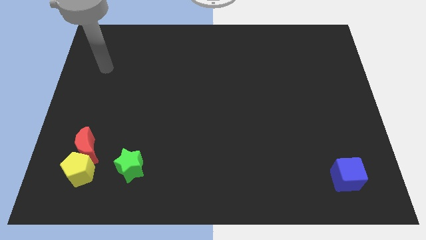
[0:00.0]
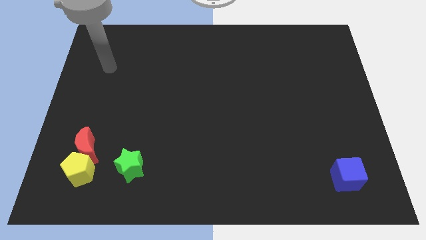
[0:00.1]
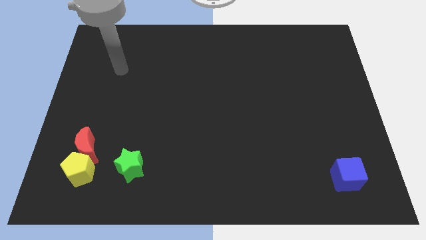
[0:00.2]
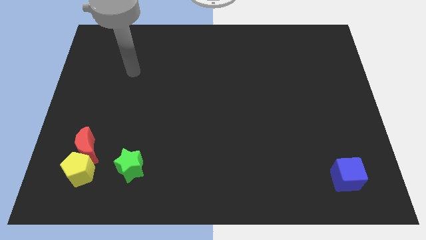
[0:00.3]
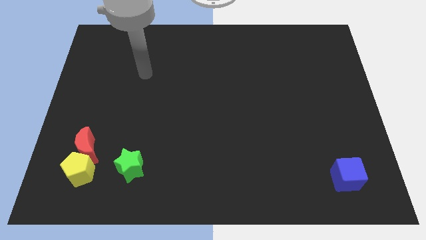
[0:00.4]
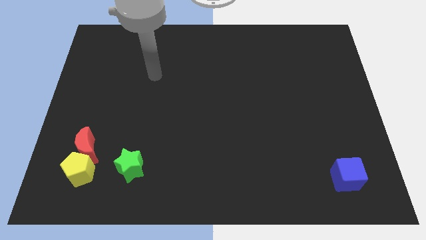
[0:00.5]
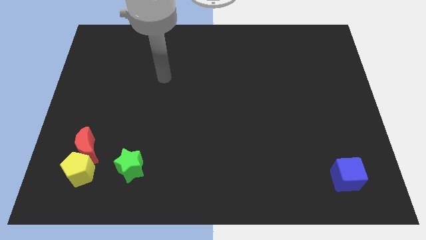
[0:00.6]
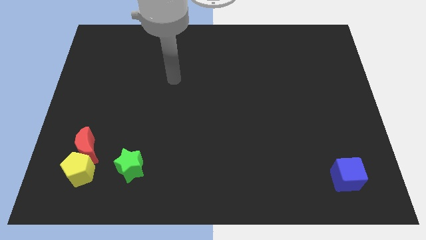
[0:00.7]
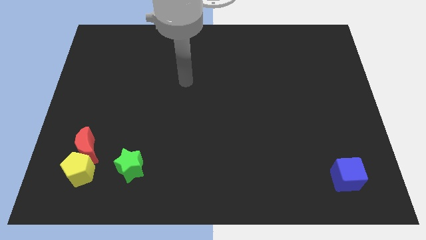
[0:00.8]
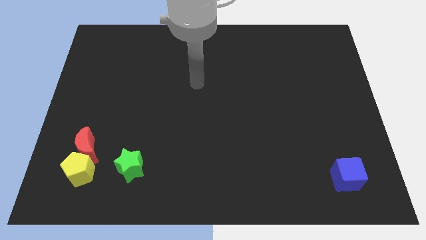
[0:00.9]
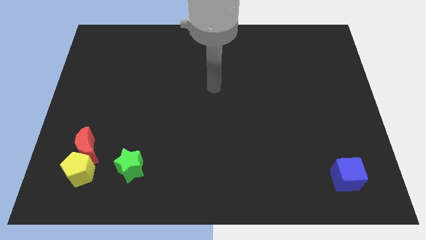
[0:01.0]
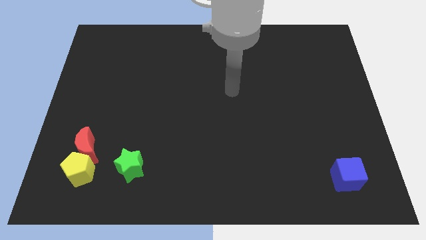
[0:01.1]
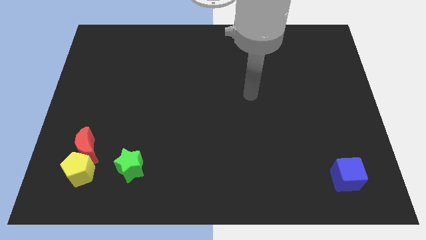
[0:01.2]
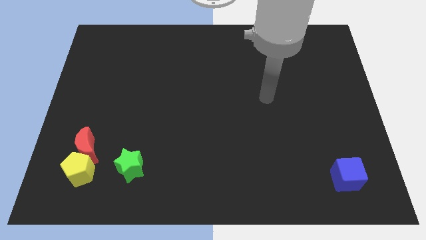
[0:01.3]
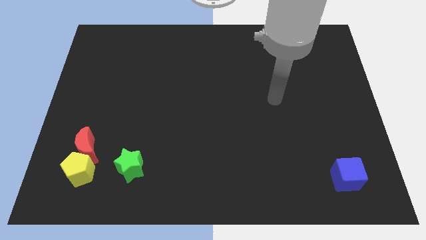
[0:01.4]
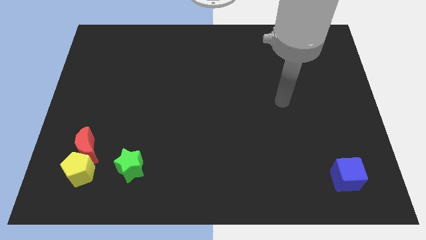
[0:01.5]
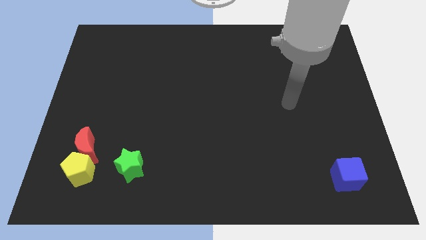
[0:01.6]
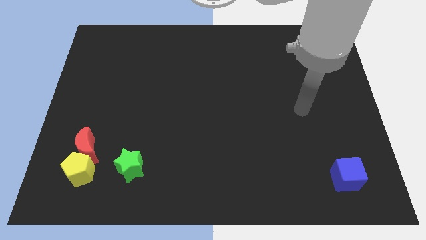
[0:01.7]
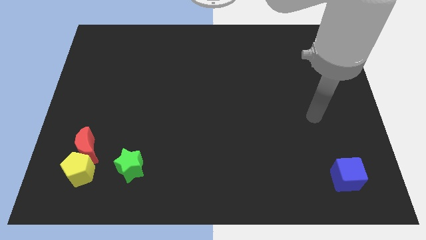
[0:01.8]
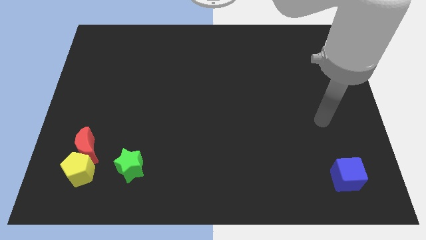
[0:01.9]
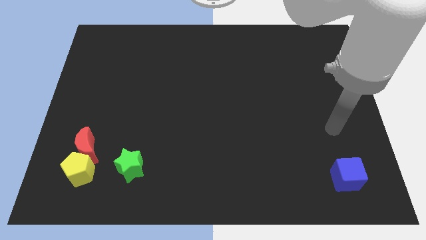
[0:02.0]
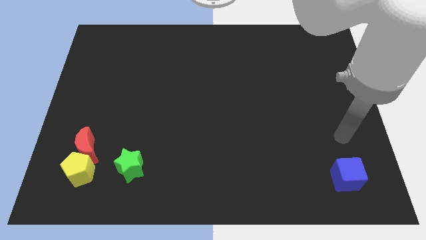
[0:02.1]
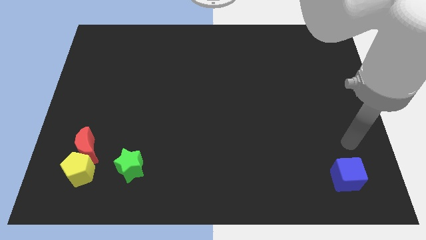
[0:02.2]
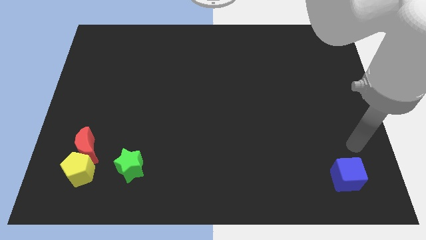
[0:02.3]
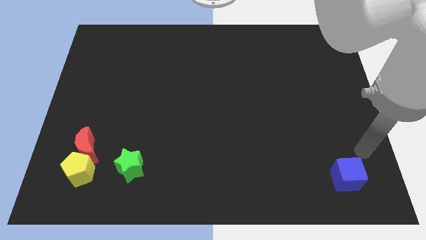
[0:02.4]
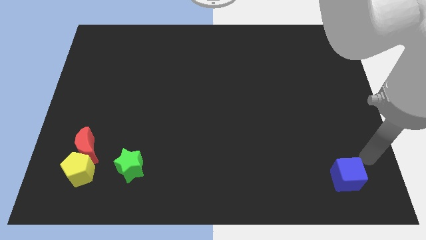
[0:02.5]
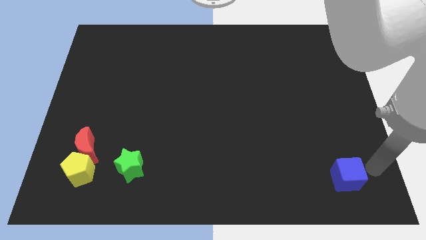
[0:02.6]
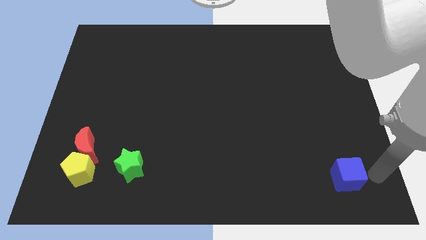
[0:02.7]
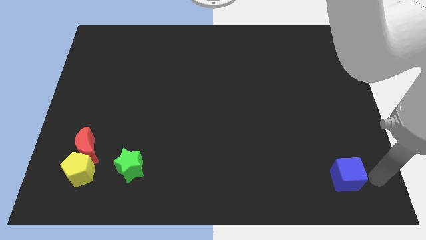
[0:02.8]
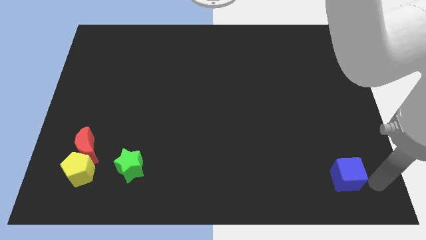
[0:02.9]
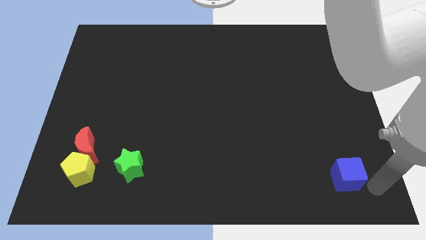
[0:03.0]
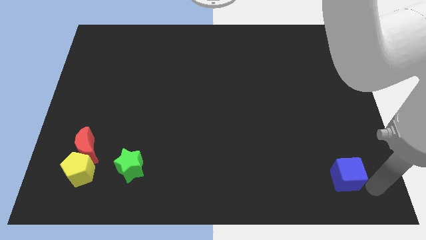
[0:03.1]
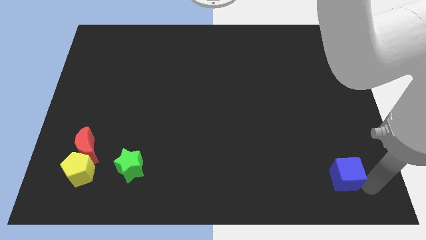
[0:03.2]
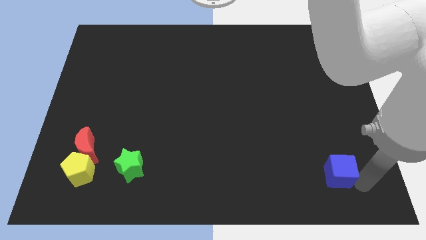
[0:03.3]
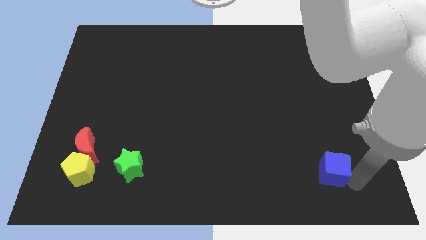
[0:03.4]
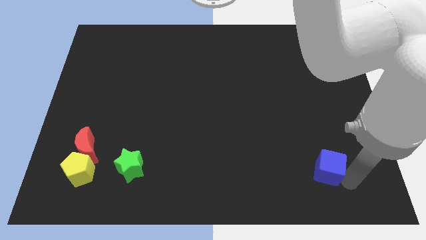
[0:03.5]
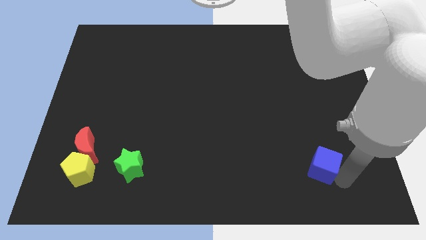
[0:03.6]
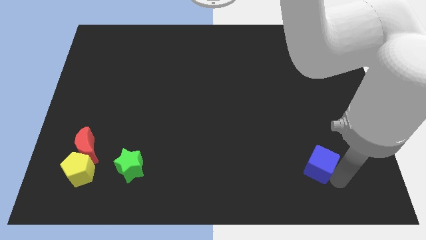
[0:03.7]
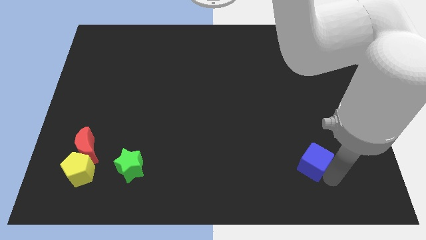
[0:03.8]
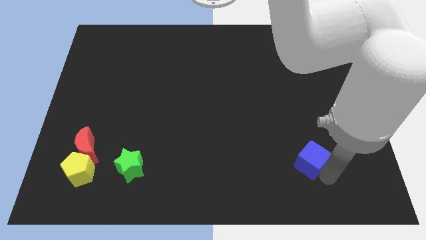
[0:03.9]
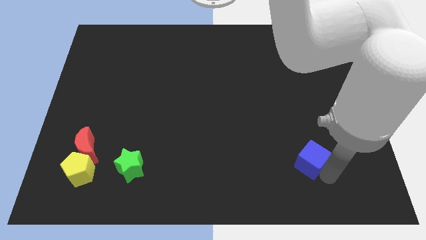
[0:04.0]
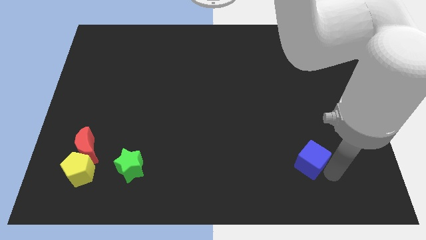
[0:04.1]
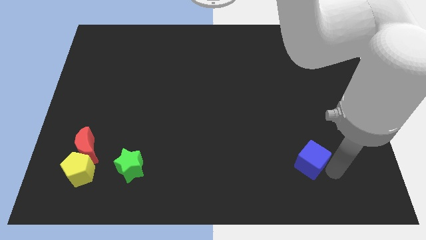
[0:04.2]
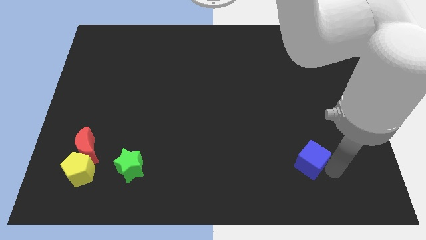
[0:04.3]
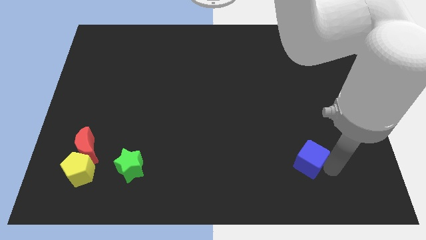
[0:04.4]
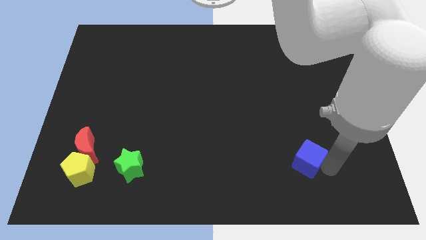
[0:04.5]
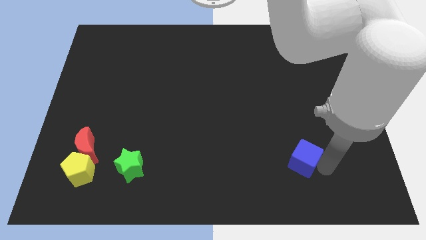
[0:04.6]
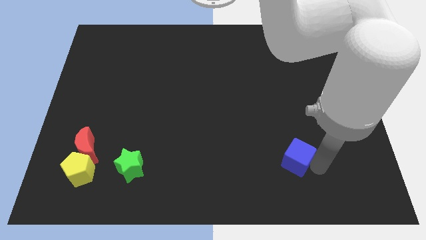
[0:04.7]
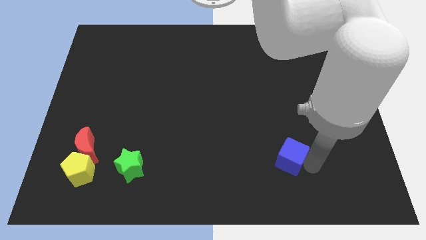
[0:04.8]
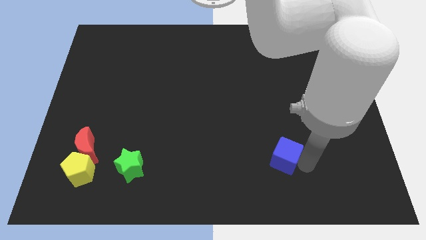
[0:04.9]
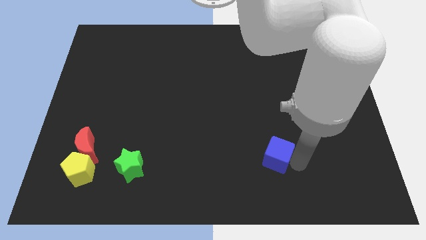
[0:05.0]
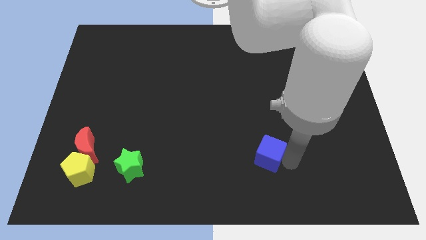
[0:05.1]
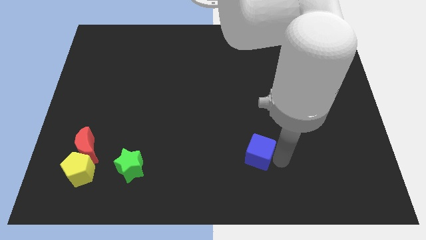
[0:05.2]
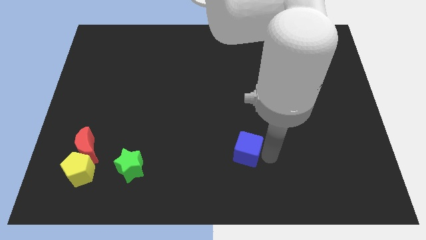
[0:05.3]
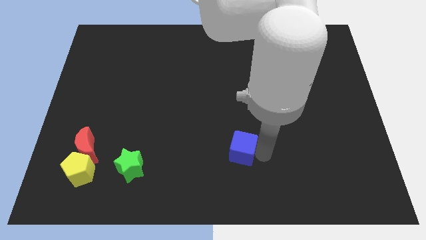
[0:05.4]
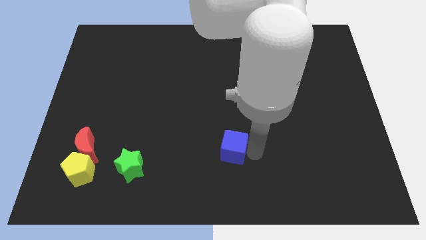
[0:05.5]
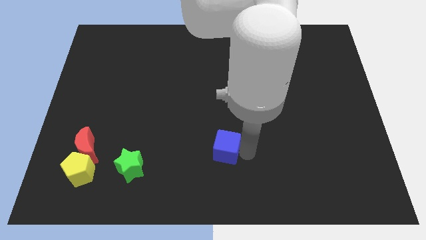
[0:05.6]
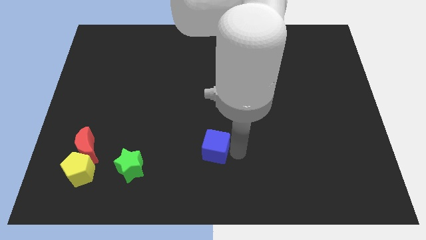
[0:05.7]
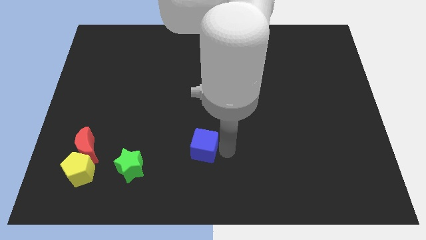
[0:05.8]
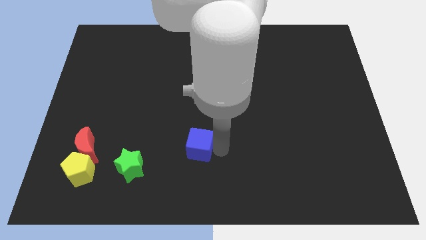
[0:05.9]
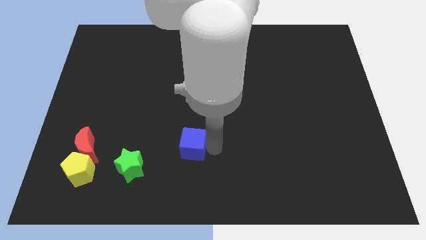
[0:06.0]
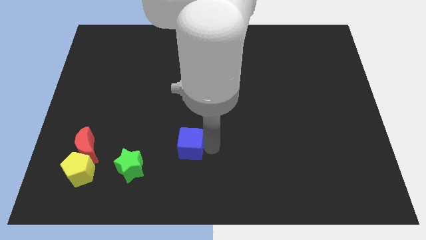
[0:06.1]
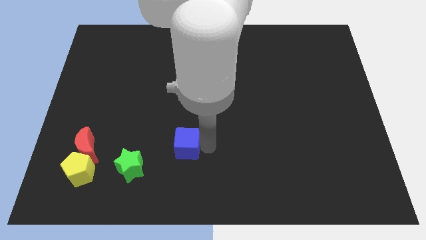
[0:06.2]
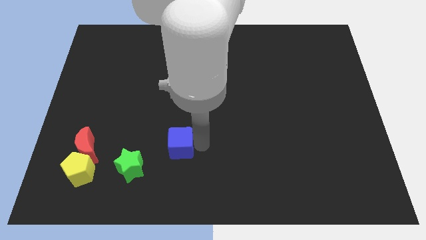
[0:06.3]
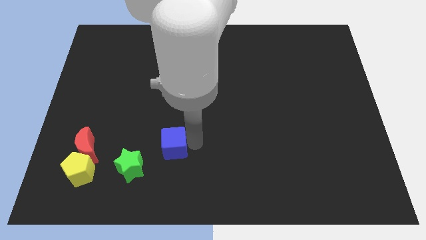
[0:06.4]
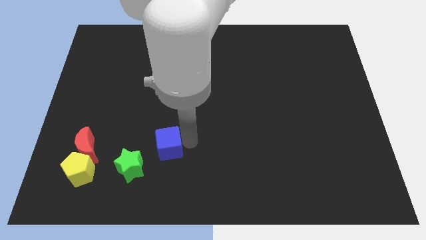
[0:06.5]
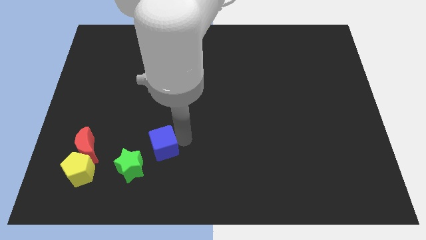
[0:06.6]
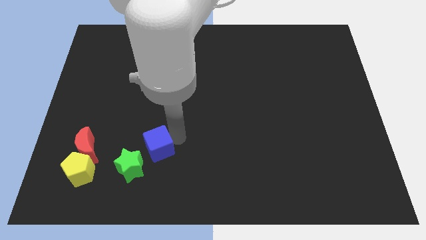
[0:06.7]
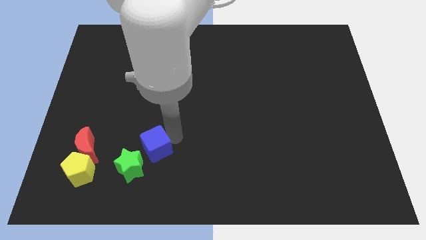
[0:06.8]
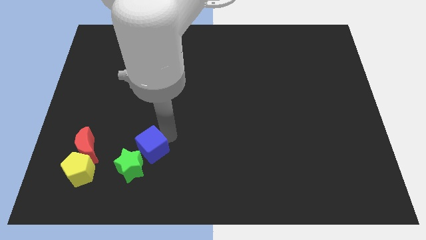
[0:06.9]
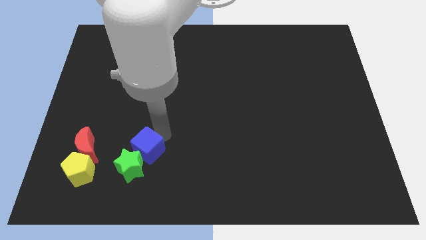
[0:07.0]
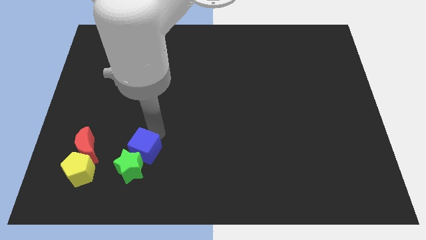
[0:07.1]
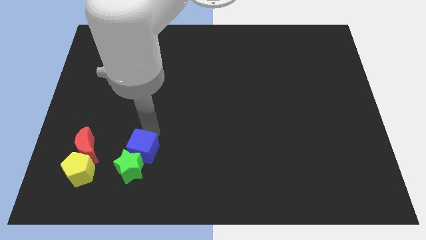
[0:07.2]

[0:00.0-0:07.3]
move the cube to the green block

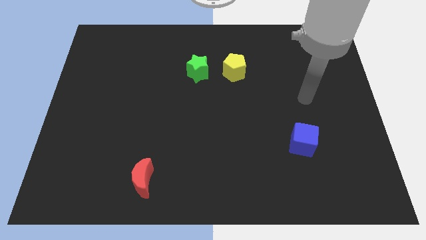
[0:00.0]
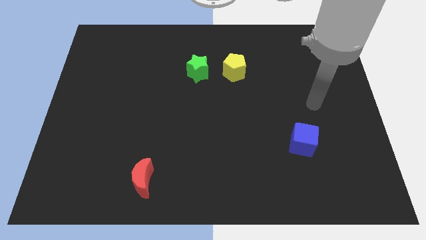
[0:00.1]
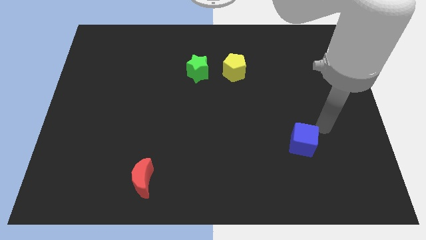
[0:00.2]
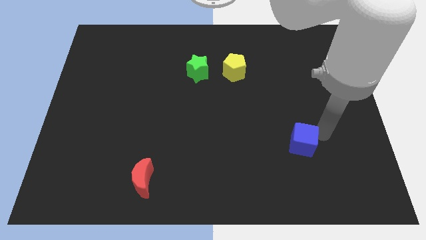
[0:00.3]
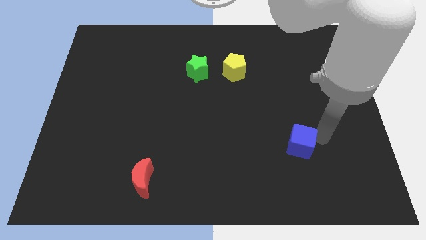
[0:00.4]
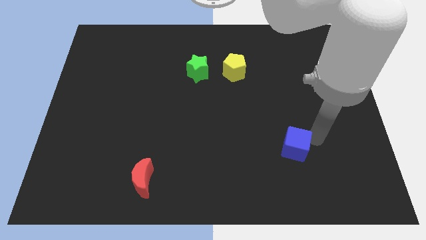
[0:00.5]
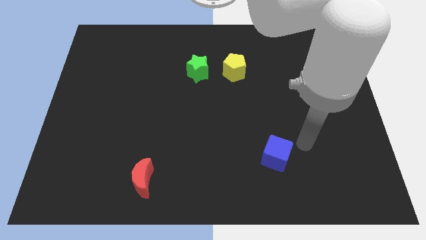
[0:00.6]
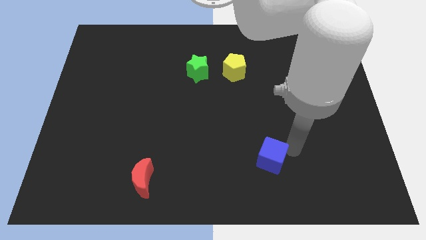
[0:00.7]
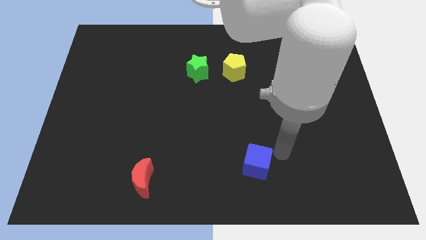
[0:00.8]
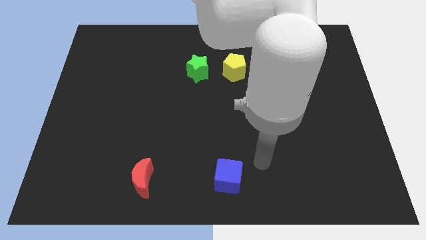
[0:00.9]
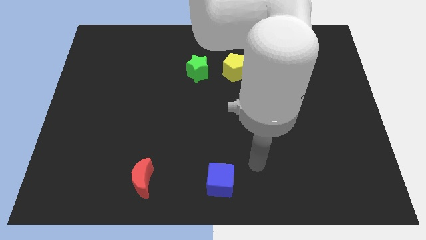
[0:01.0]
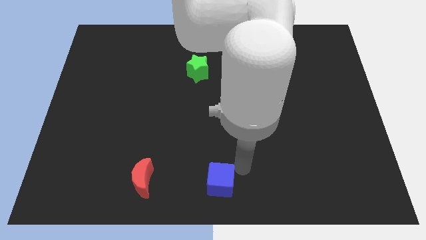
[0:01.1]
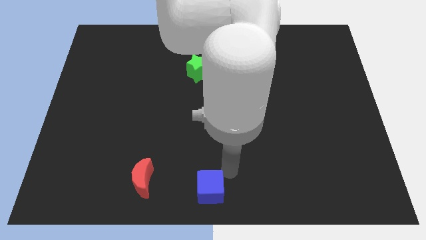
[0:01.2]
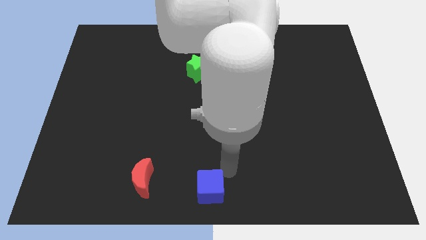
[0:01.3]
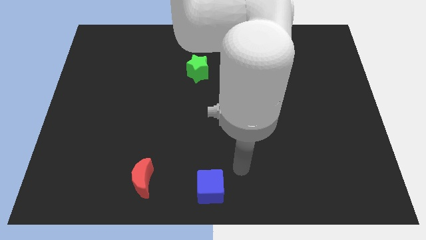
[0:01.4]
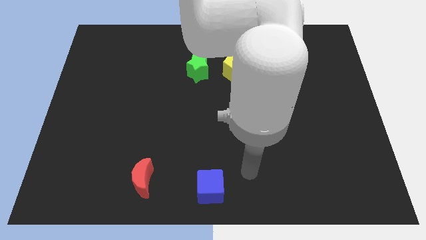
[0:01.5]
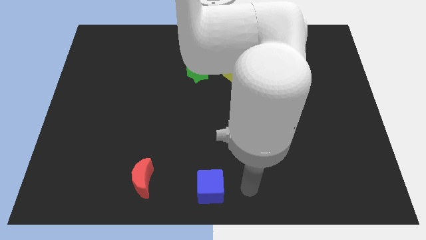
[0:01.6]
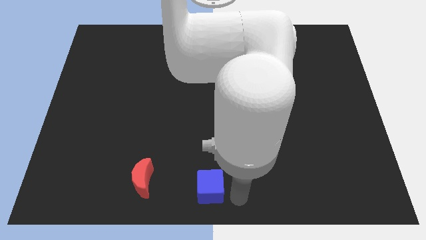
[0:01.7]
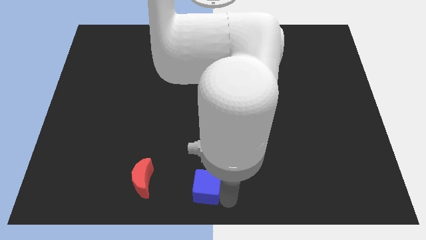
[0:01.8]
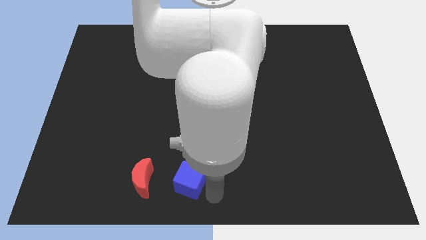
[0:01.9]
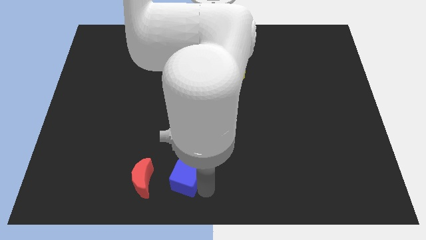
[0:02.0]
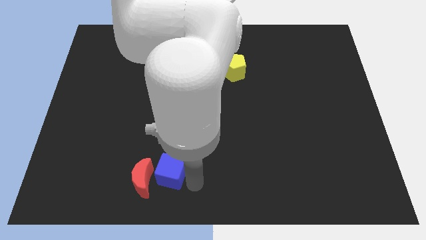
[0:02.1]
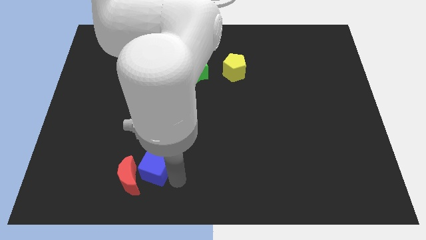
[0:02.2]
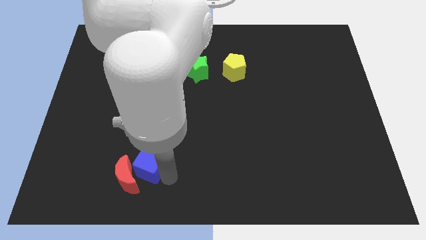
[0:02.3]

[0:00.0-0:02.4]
move the blue cube next to the red moon
